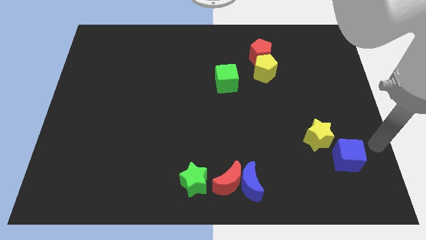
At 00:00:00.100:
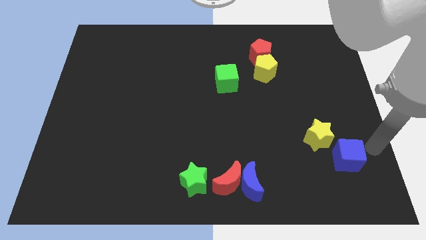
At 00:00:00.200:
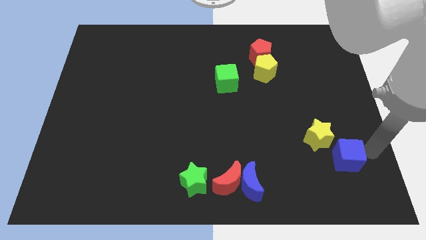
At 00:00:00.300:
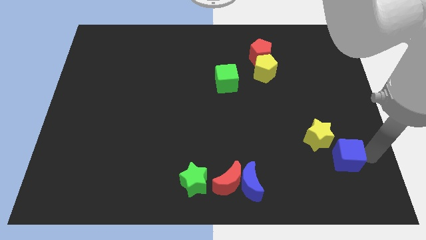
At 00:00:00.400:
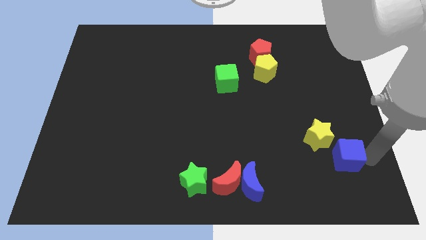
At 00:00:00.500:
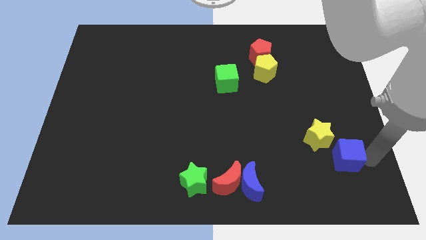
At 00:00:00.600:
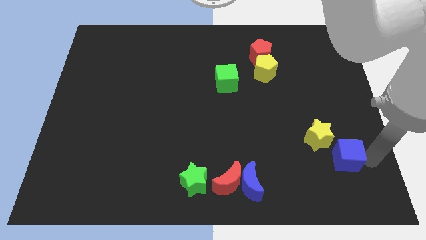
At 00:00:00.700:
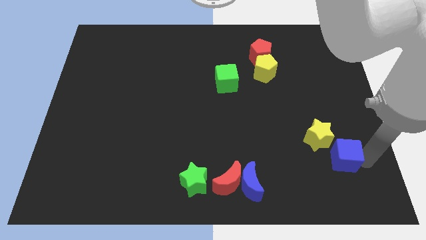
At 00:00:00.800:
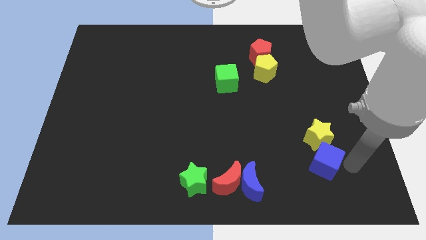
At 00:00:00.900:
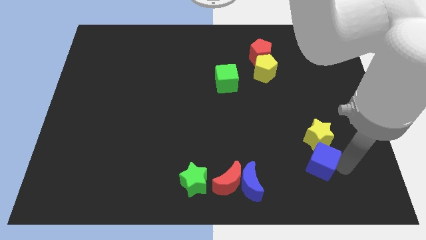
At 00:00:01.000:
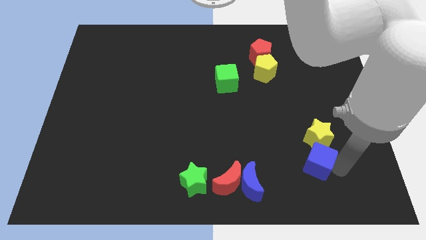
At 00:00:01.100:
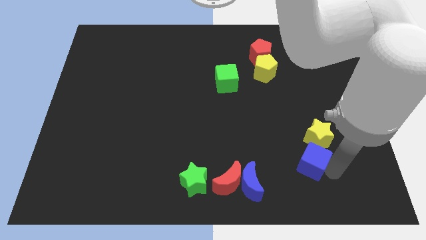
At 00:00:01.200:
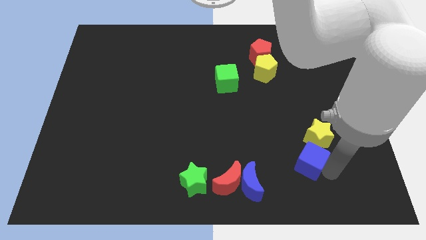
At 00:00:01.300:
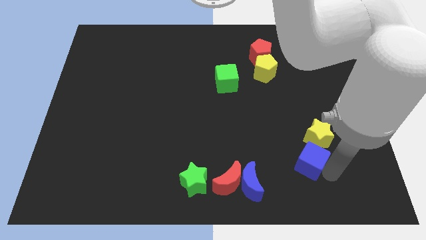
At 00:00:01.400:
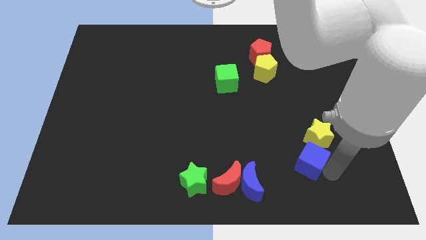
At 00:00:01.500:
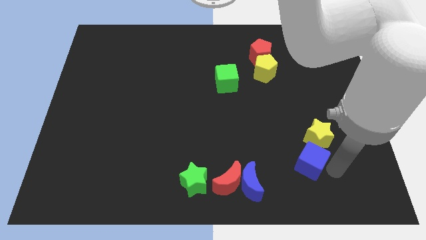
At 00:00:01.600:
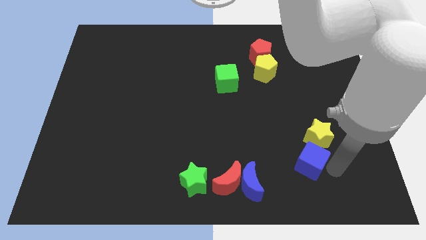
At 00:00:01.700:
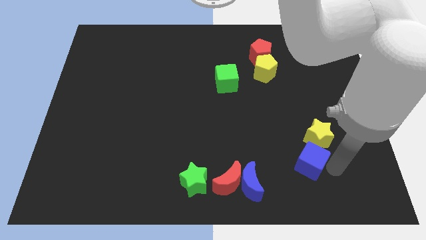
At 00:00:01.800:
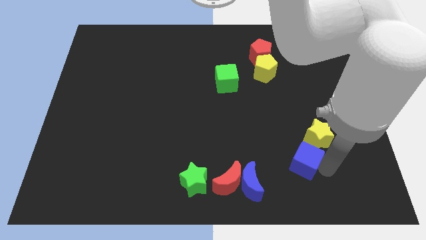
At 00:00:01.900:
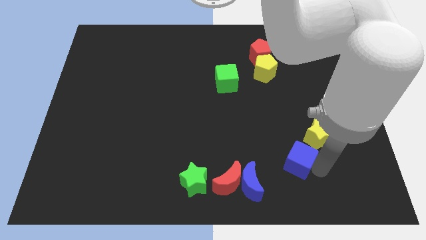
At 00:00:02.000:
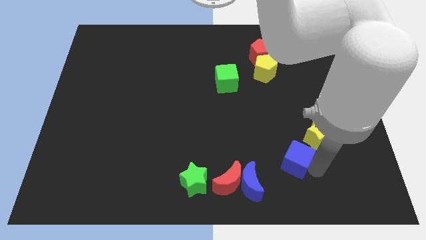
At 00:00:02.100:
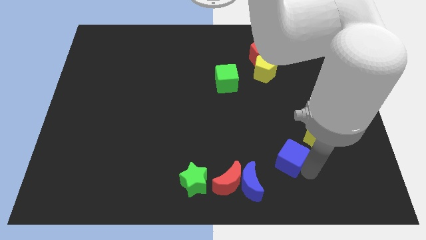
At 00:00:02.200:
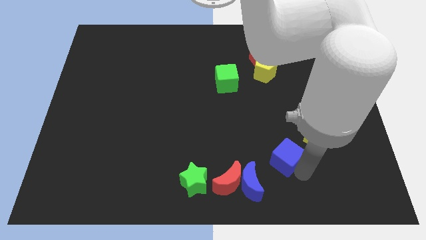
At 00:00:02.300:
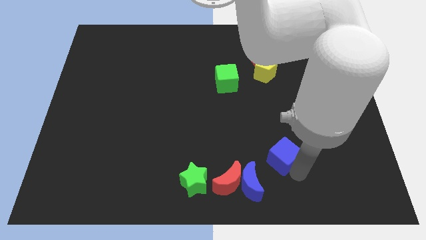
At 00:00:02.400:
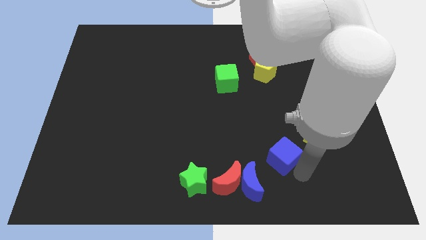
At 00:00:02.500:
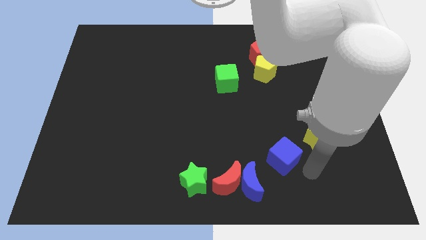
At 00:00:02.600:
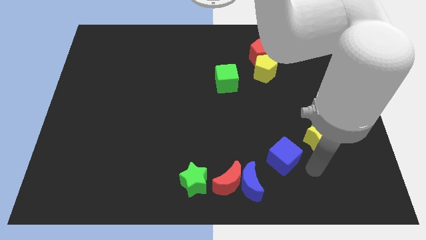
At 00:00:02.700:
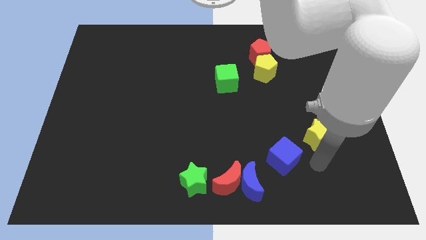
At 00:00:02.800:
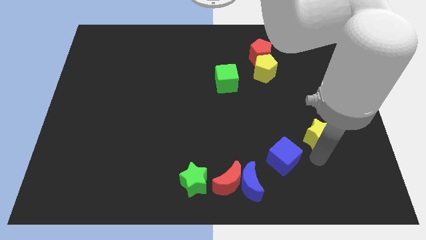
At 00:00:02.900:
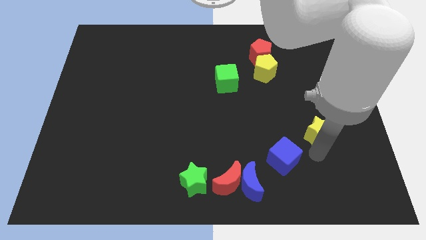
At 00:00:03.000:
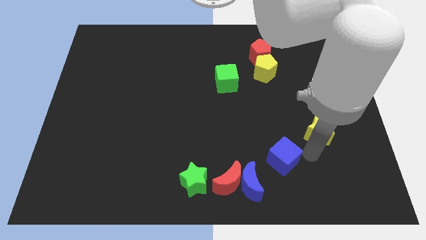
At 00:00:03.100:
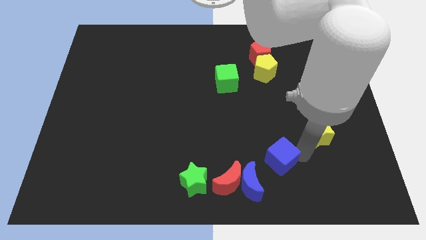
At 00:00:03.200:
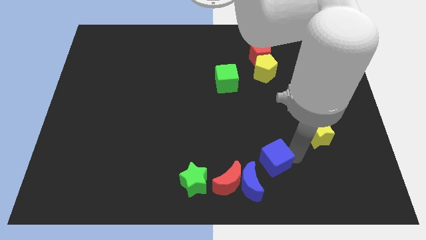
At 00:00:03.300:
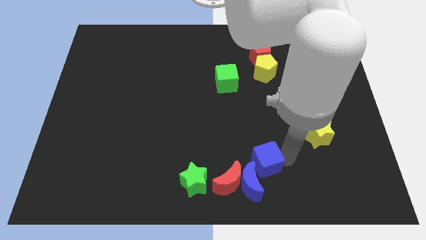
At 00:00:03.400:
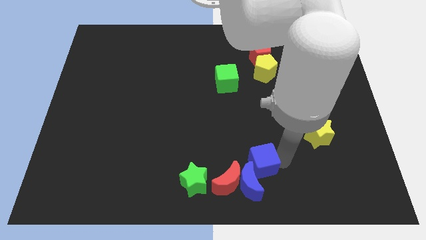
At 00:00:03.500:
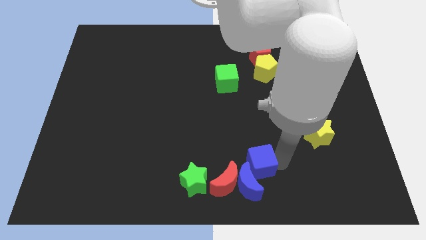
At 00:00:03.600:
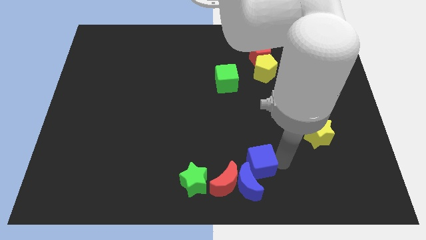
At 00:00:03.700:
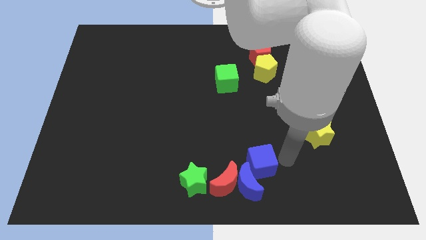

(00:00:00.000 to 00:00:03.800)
move the blue cube right above the blue moon

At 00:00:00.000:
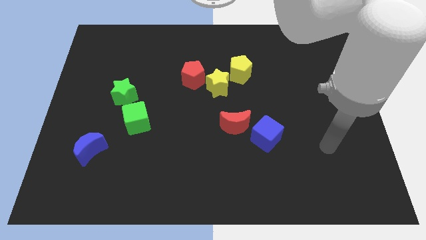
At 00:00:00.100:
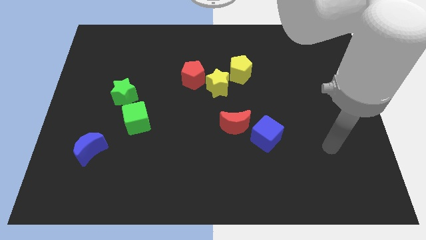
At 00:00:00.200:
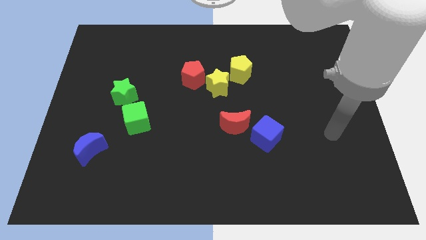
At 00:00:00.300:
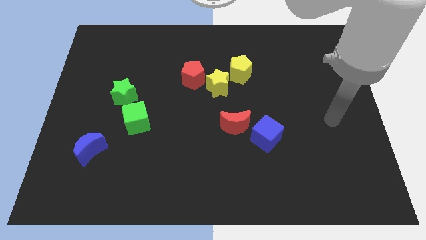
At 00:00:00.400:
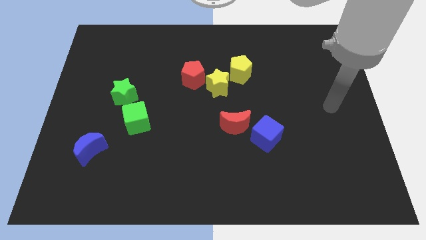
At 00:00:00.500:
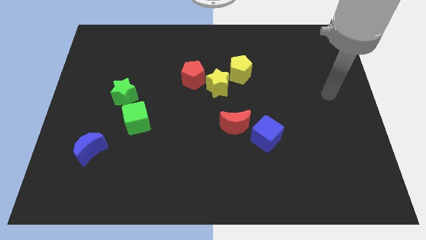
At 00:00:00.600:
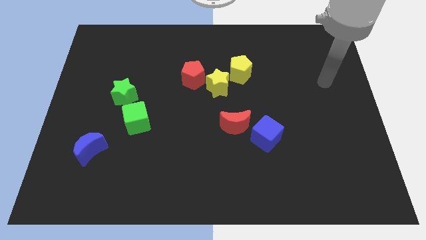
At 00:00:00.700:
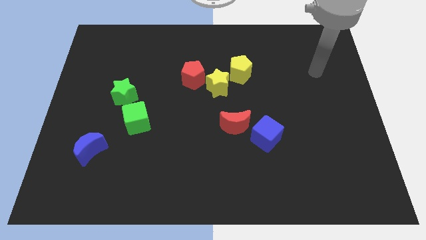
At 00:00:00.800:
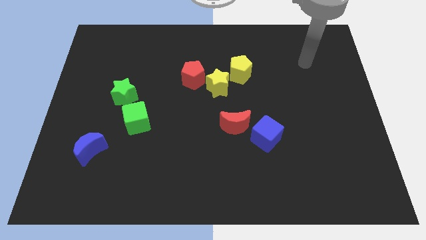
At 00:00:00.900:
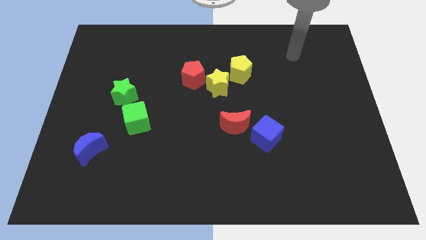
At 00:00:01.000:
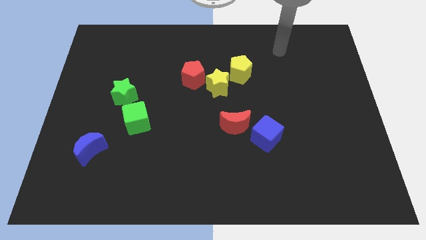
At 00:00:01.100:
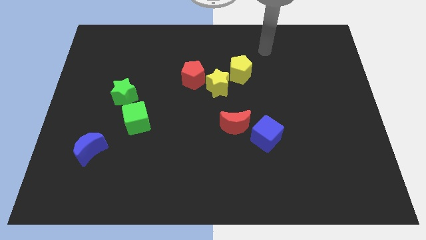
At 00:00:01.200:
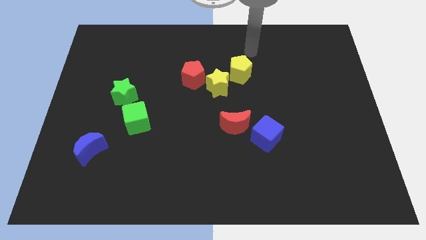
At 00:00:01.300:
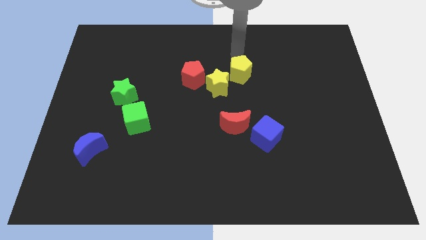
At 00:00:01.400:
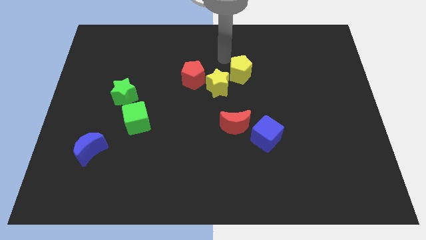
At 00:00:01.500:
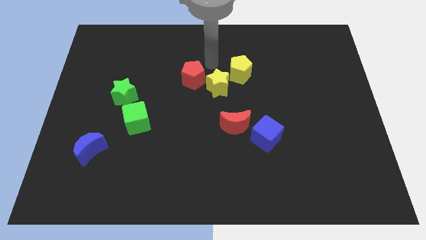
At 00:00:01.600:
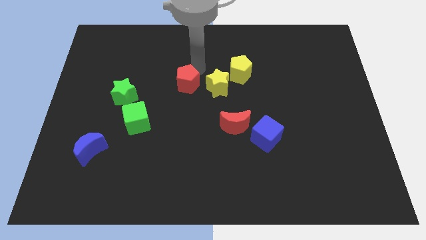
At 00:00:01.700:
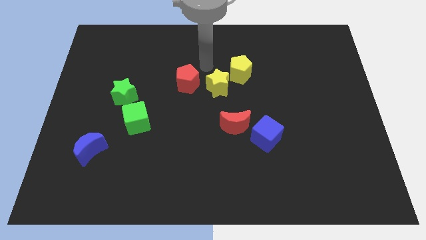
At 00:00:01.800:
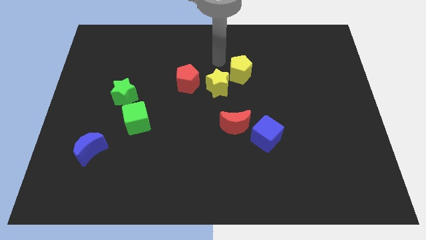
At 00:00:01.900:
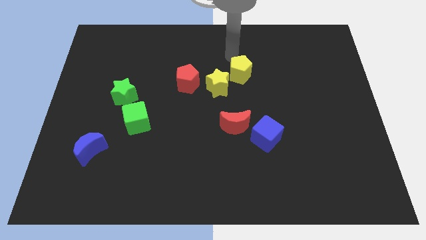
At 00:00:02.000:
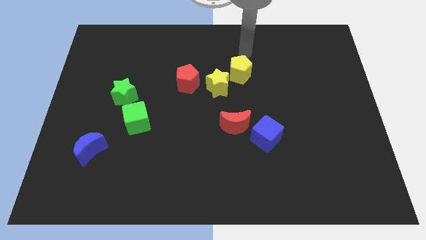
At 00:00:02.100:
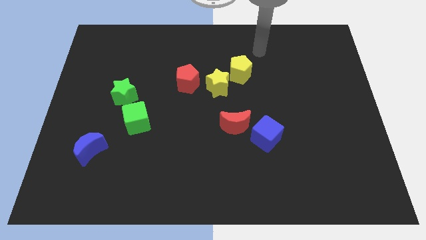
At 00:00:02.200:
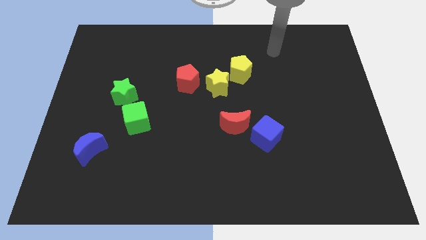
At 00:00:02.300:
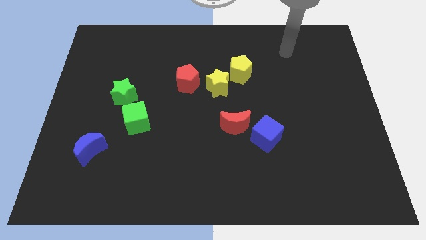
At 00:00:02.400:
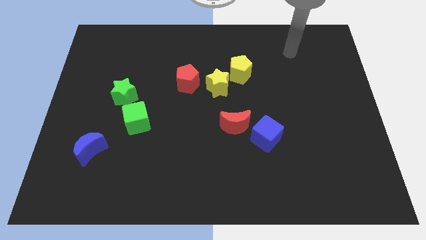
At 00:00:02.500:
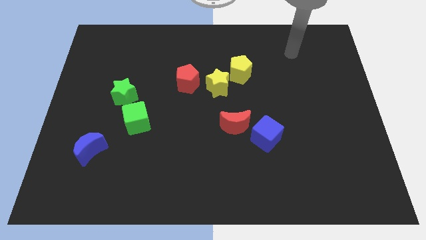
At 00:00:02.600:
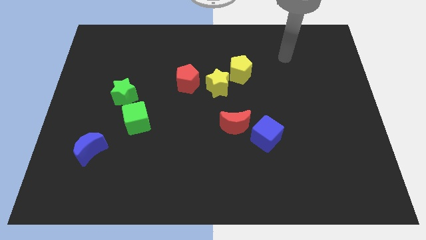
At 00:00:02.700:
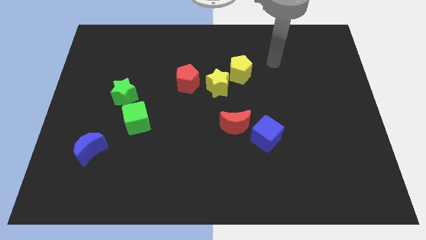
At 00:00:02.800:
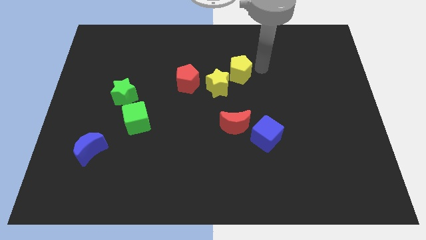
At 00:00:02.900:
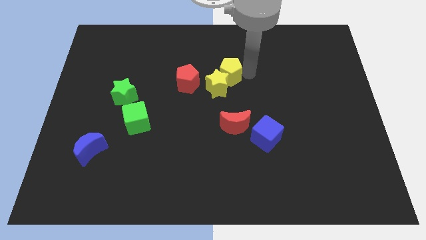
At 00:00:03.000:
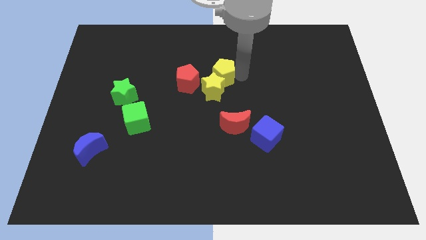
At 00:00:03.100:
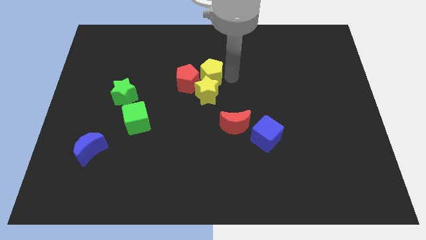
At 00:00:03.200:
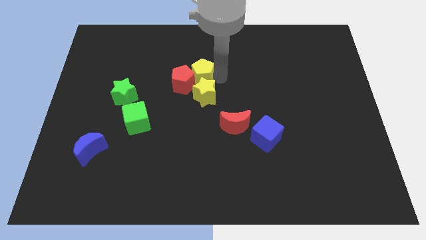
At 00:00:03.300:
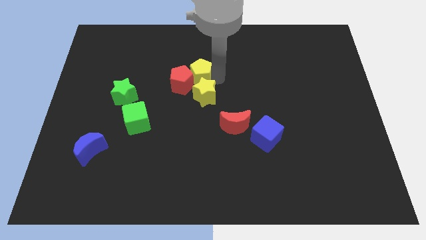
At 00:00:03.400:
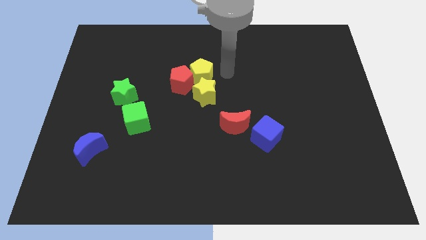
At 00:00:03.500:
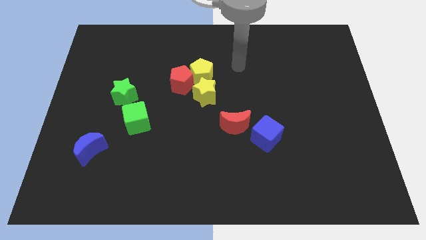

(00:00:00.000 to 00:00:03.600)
push the yellow blocks into the red pentagon

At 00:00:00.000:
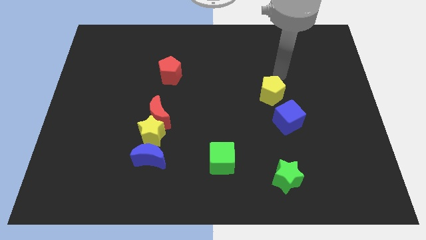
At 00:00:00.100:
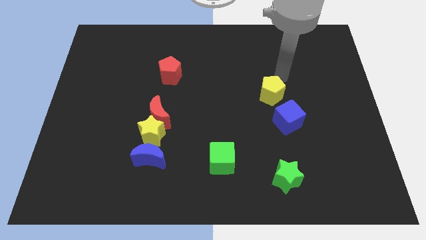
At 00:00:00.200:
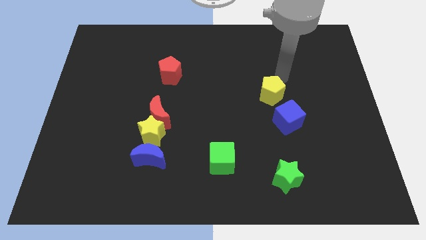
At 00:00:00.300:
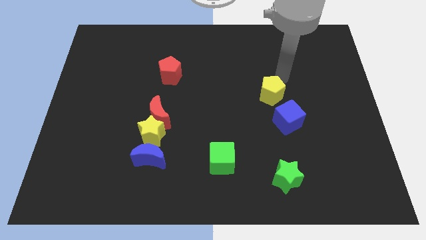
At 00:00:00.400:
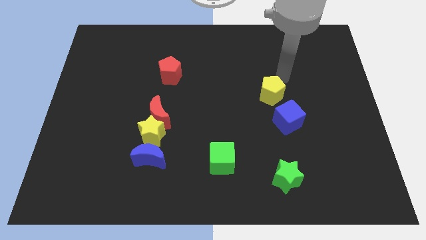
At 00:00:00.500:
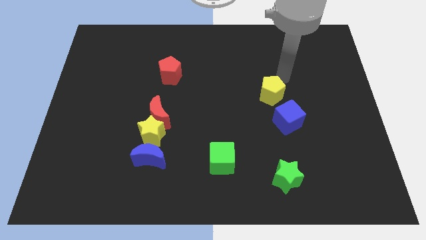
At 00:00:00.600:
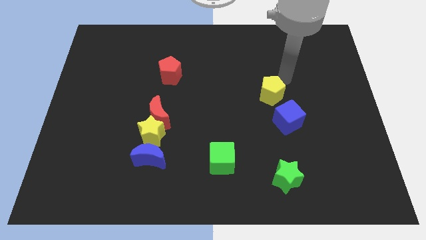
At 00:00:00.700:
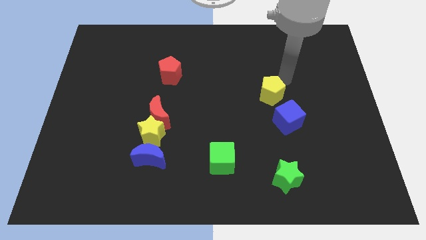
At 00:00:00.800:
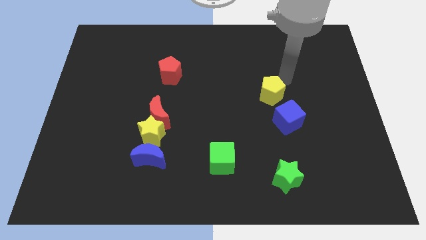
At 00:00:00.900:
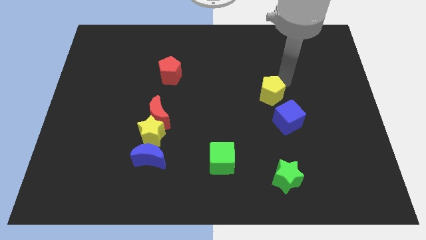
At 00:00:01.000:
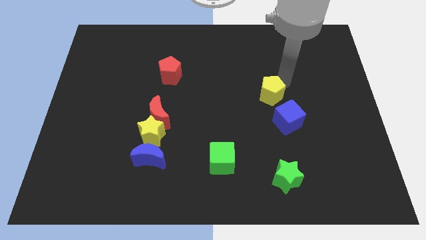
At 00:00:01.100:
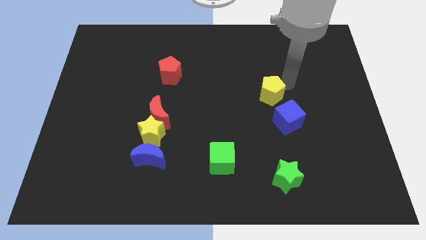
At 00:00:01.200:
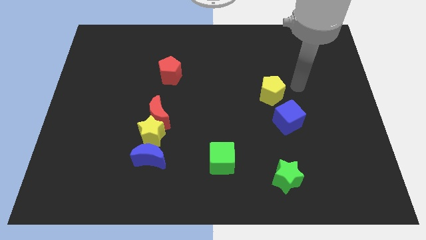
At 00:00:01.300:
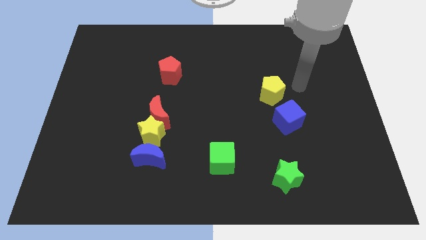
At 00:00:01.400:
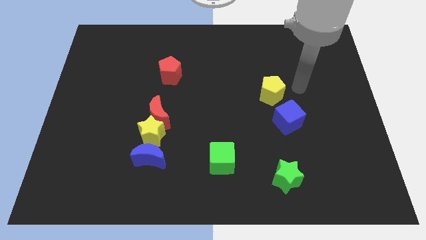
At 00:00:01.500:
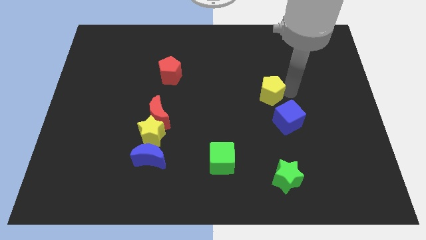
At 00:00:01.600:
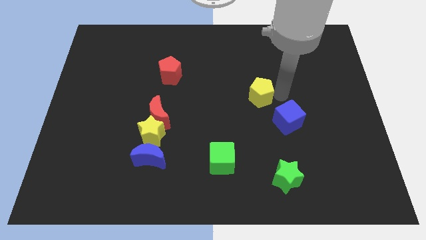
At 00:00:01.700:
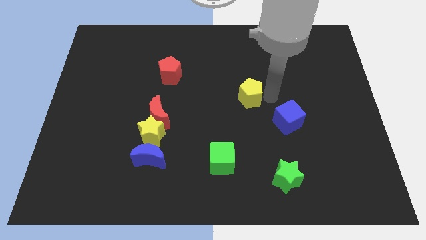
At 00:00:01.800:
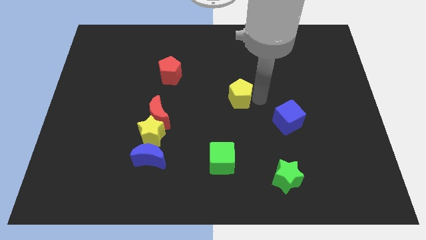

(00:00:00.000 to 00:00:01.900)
move the yellow pentagon towards the center of the board
